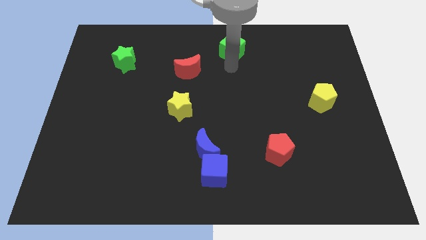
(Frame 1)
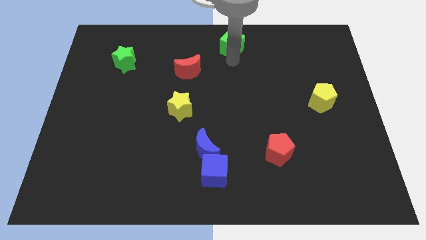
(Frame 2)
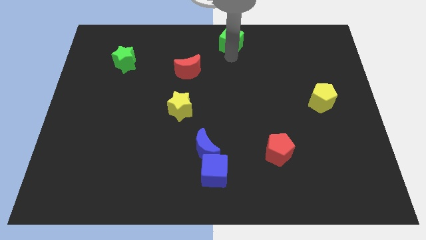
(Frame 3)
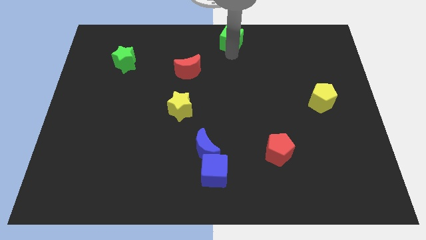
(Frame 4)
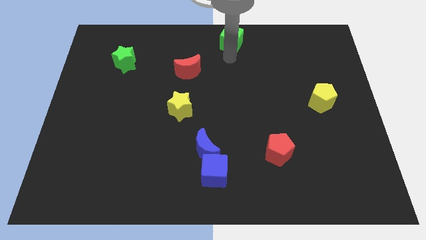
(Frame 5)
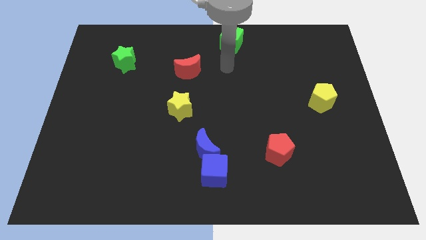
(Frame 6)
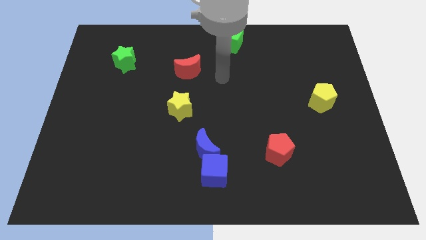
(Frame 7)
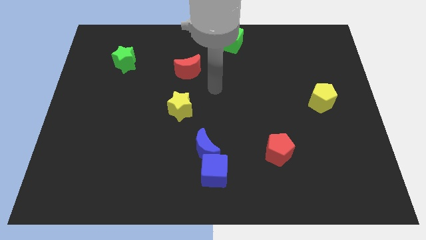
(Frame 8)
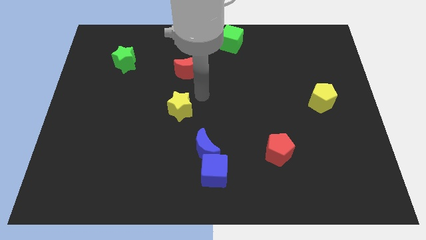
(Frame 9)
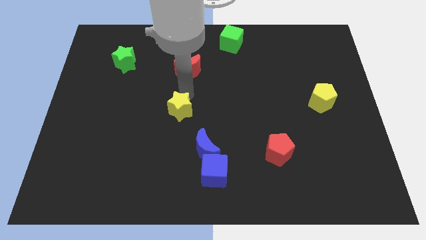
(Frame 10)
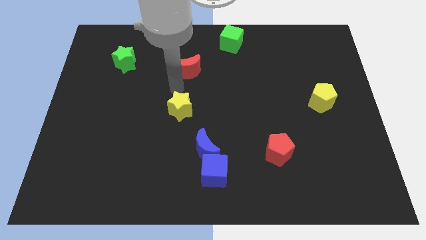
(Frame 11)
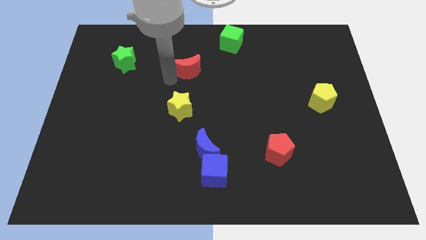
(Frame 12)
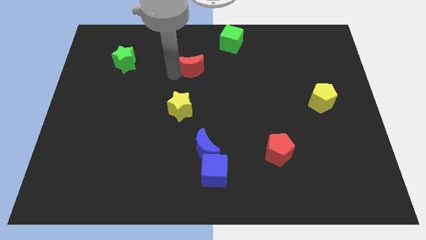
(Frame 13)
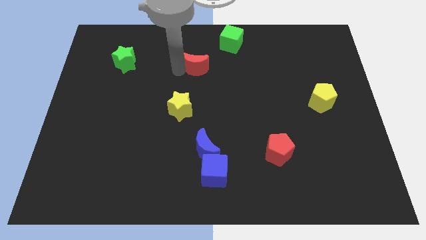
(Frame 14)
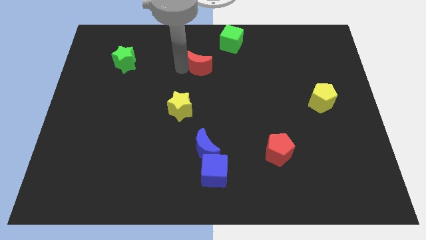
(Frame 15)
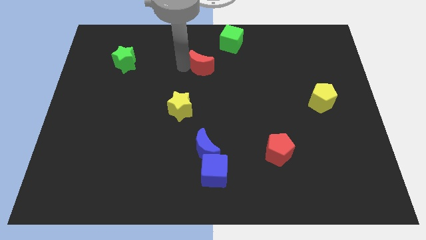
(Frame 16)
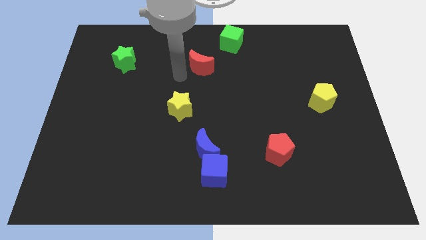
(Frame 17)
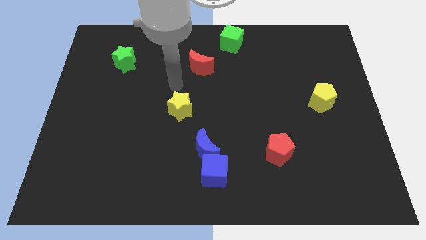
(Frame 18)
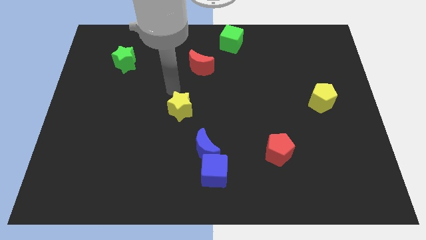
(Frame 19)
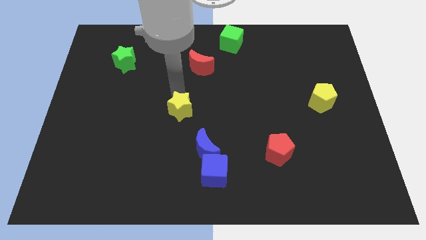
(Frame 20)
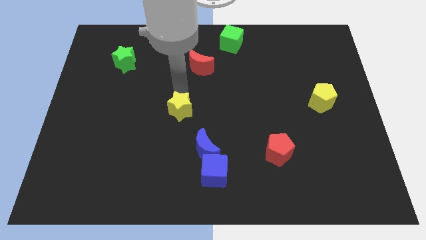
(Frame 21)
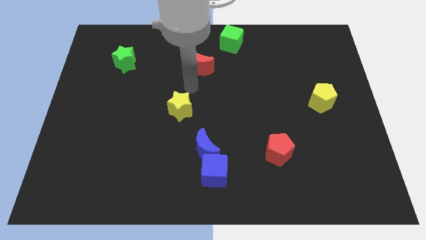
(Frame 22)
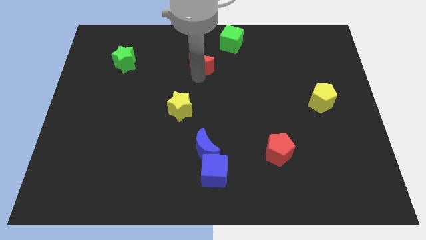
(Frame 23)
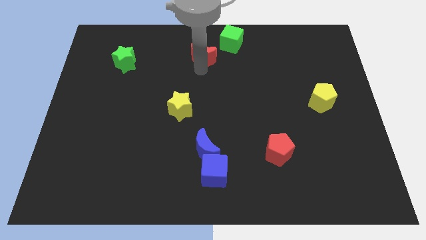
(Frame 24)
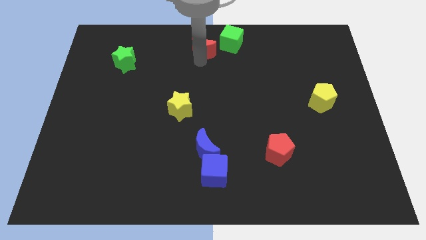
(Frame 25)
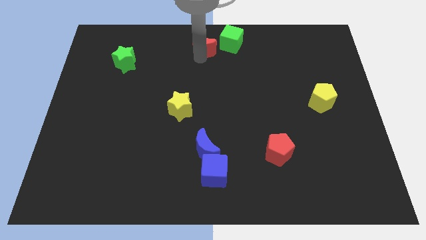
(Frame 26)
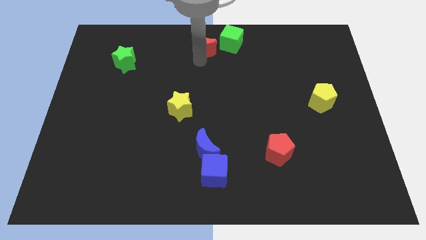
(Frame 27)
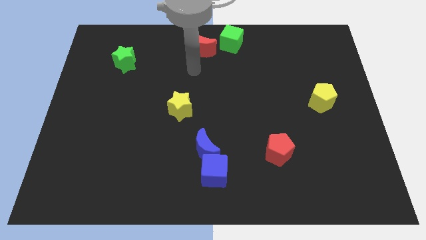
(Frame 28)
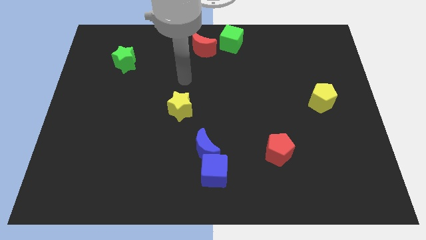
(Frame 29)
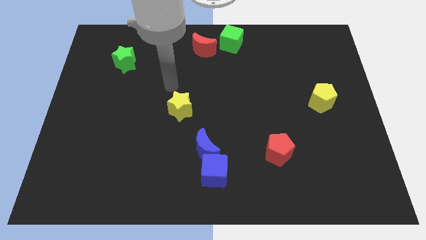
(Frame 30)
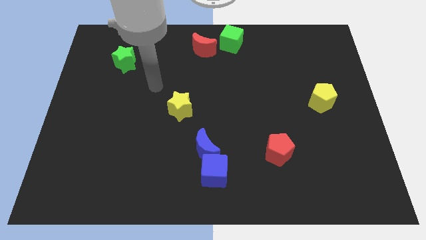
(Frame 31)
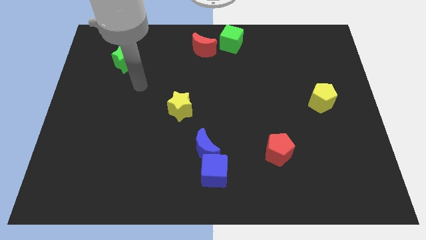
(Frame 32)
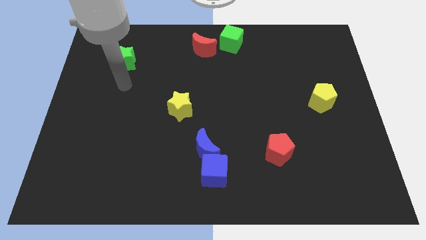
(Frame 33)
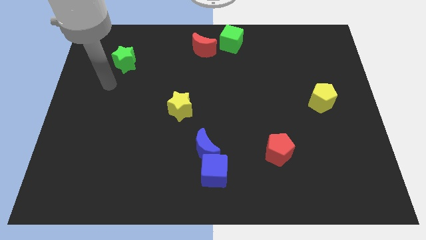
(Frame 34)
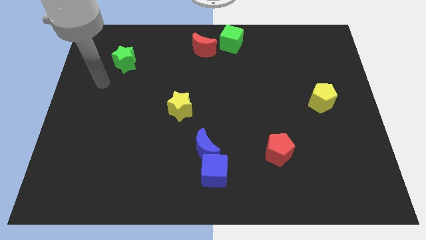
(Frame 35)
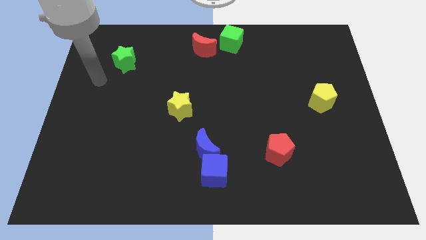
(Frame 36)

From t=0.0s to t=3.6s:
move the red moon to the left of green cube

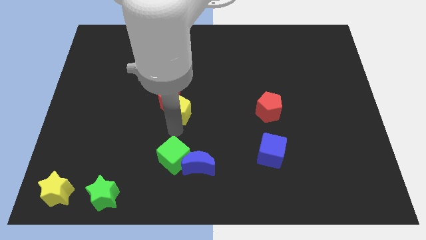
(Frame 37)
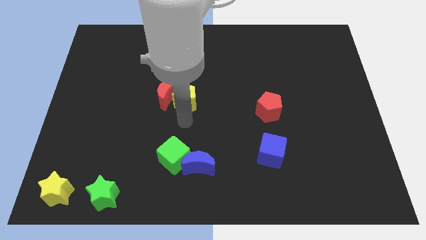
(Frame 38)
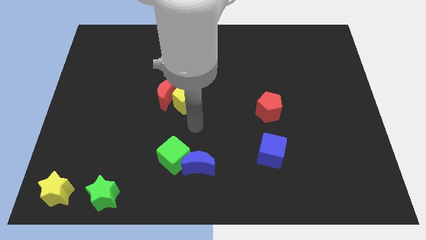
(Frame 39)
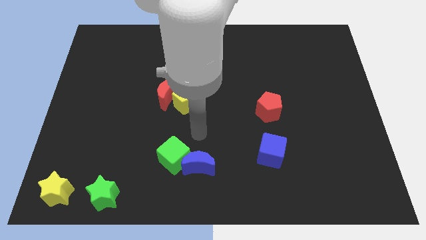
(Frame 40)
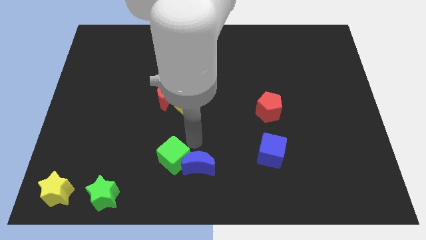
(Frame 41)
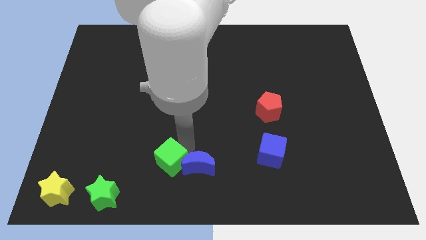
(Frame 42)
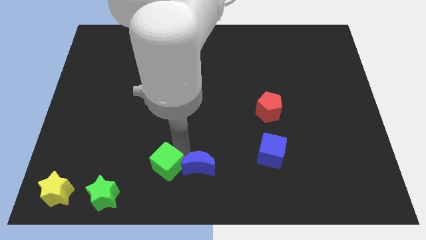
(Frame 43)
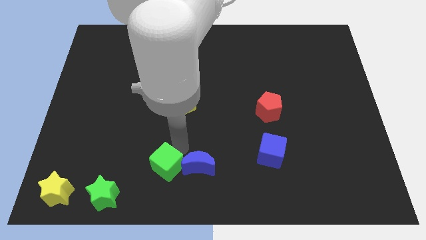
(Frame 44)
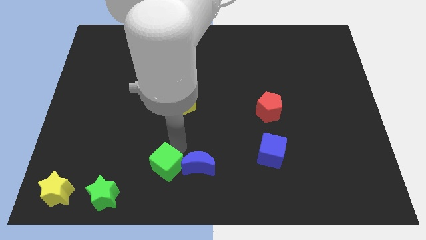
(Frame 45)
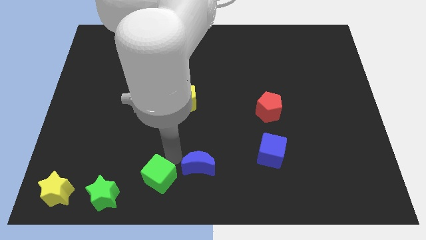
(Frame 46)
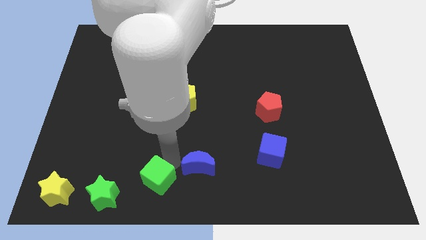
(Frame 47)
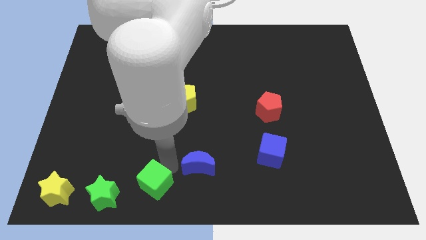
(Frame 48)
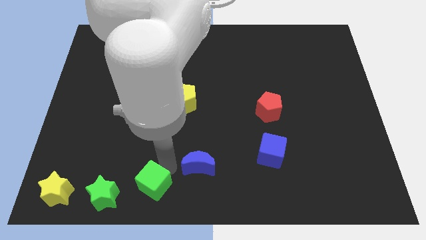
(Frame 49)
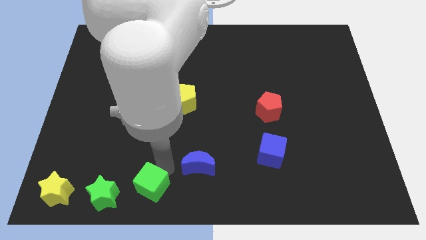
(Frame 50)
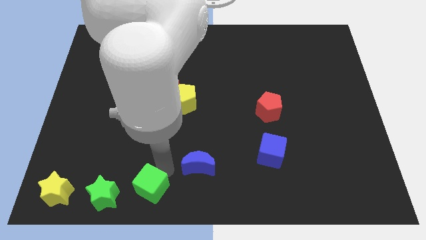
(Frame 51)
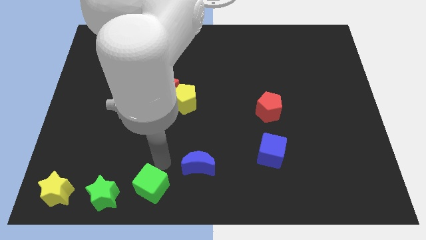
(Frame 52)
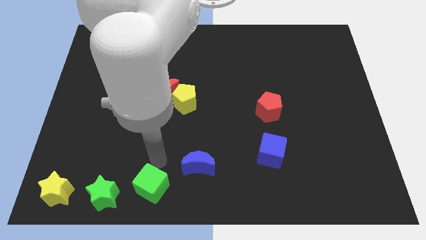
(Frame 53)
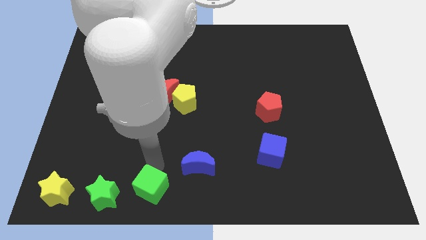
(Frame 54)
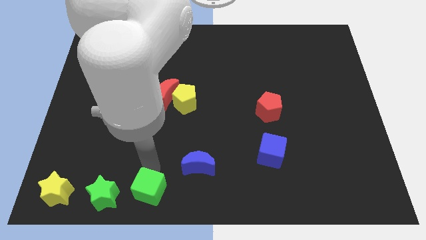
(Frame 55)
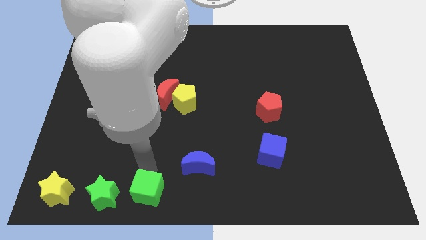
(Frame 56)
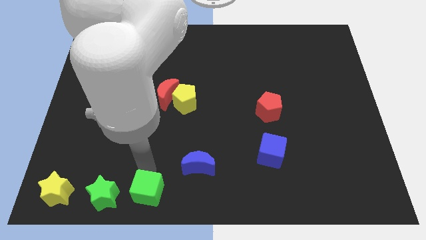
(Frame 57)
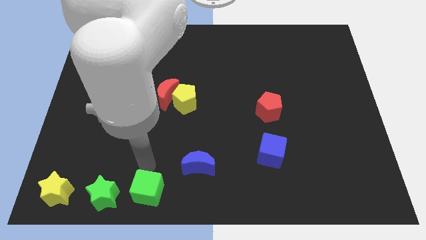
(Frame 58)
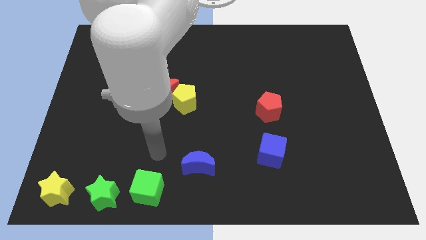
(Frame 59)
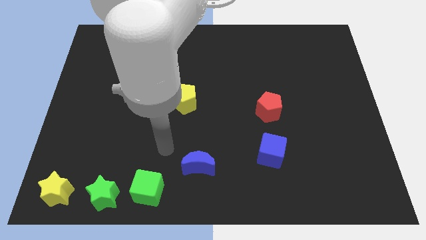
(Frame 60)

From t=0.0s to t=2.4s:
push the green cube right to the green star

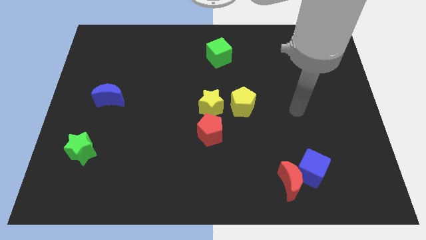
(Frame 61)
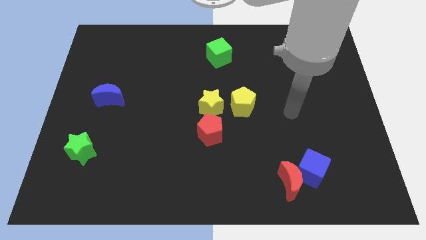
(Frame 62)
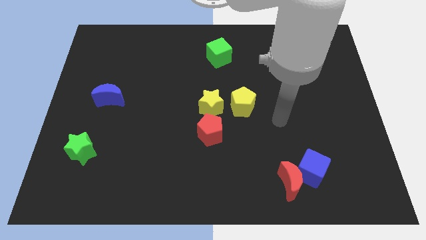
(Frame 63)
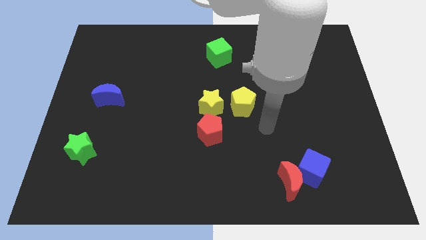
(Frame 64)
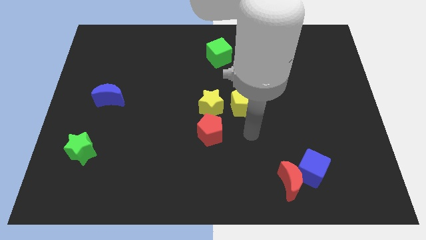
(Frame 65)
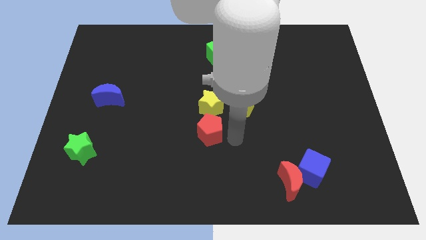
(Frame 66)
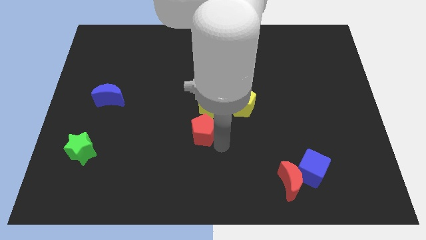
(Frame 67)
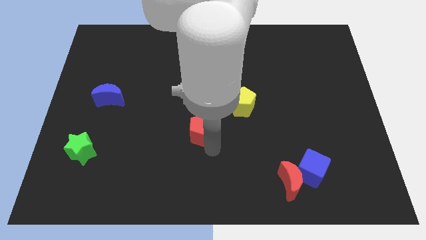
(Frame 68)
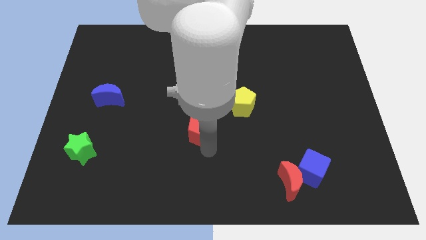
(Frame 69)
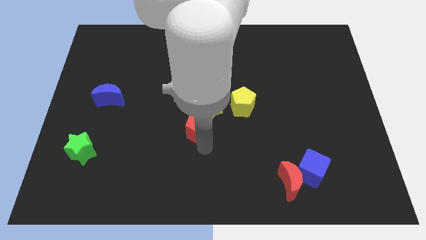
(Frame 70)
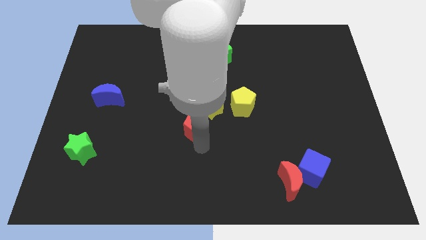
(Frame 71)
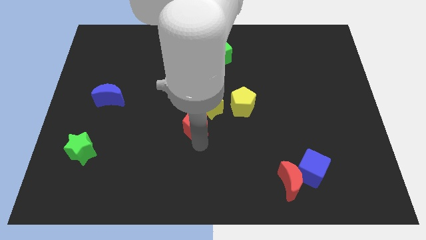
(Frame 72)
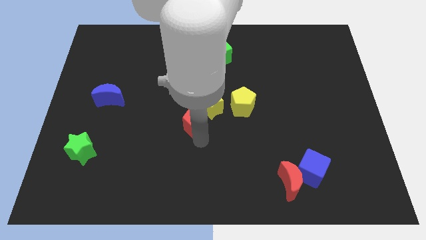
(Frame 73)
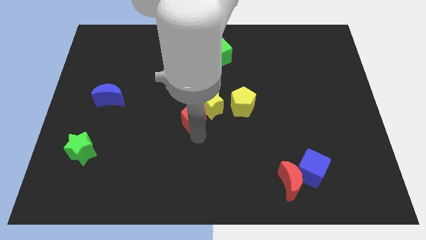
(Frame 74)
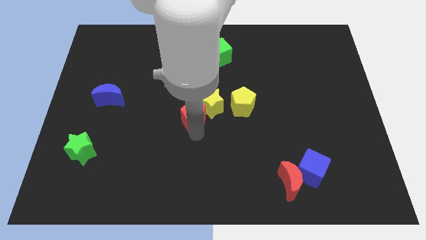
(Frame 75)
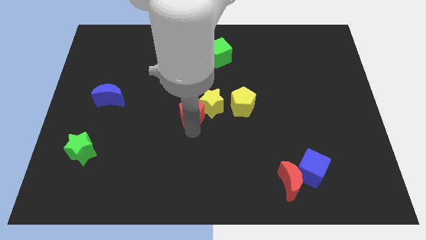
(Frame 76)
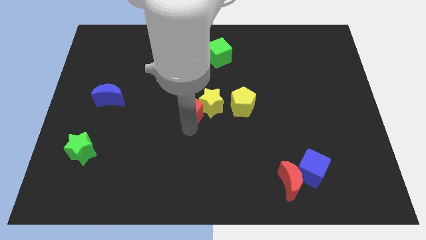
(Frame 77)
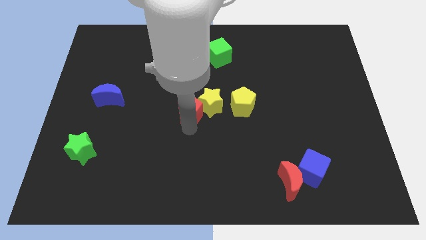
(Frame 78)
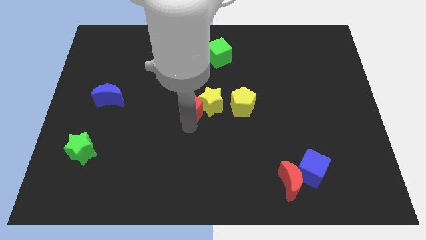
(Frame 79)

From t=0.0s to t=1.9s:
move the red pentagon into the yellow star

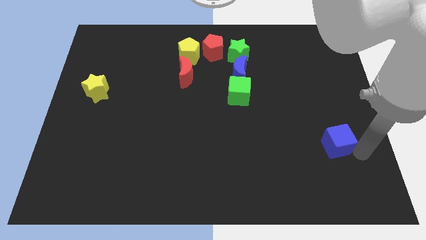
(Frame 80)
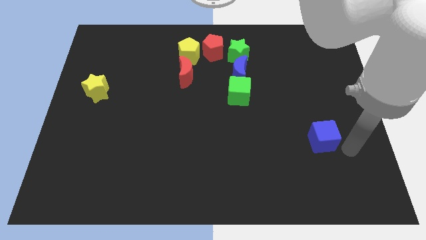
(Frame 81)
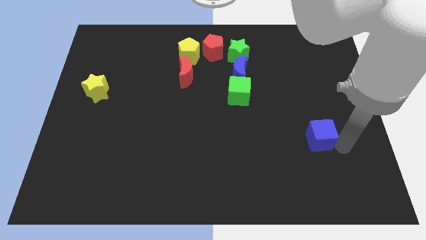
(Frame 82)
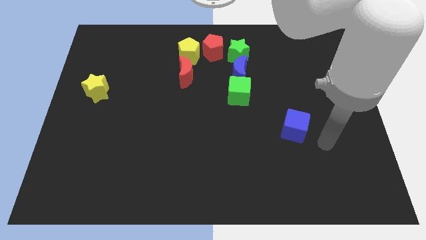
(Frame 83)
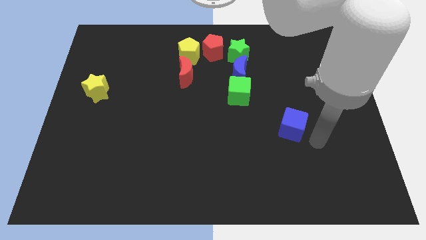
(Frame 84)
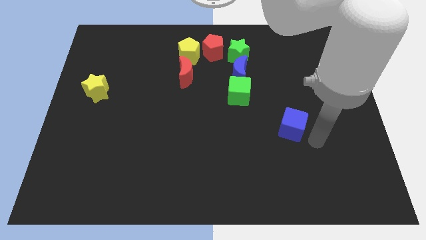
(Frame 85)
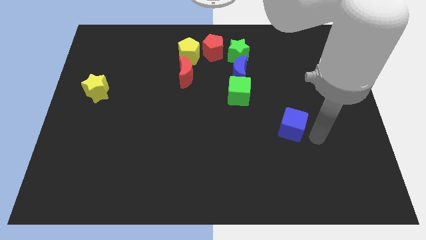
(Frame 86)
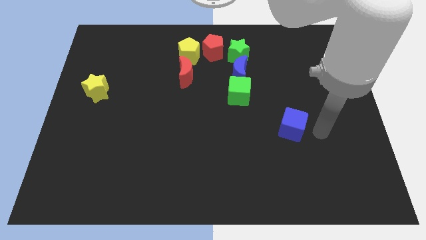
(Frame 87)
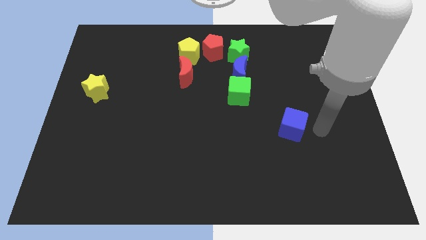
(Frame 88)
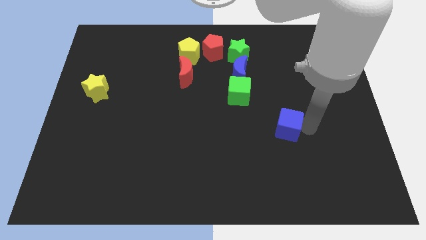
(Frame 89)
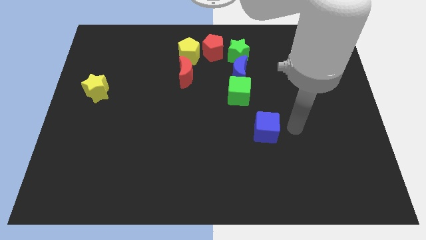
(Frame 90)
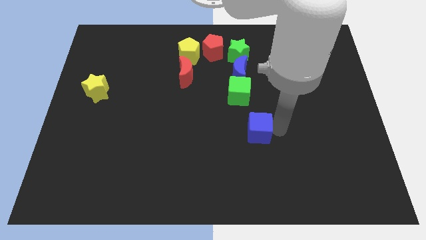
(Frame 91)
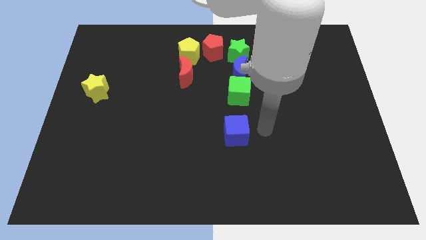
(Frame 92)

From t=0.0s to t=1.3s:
place the blue cube vertical to the green cube
